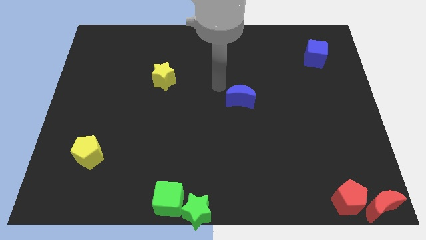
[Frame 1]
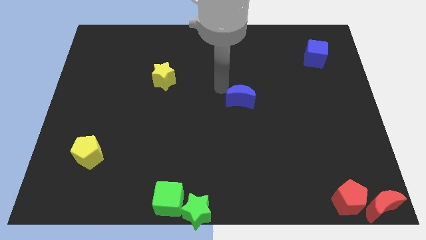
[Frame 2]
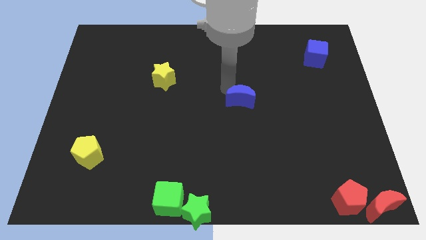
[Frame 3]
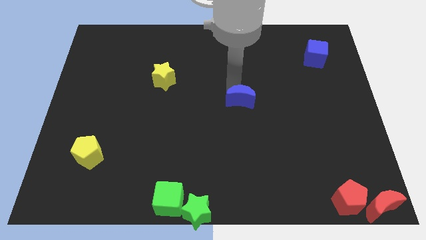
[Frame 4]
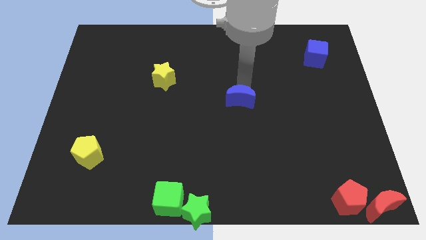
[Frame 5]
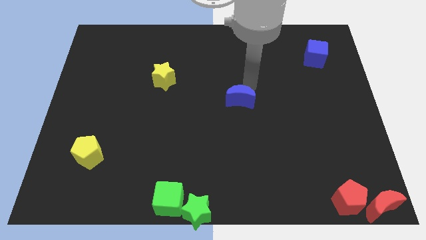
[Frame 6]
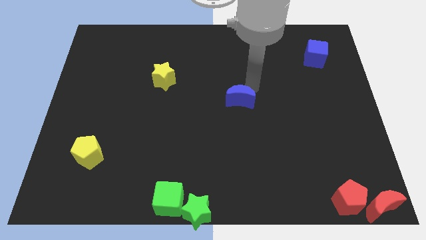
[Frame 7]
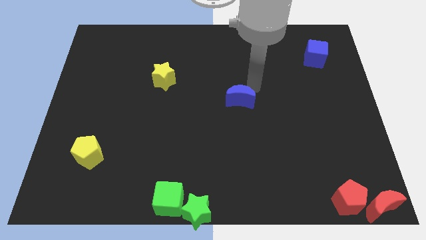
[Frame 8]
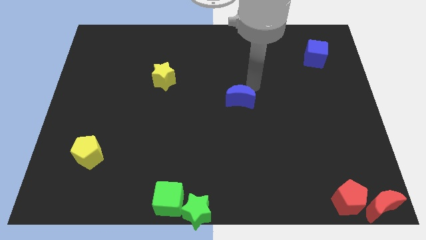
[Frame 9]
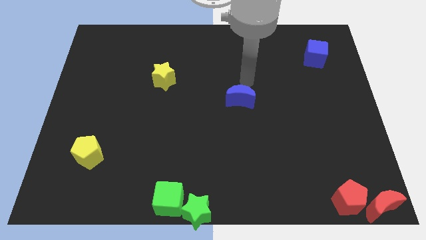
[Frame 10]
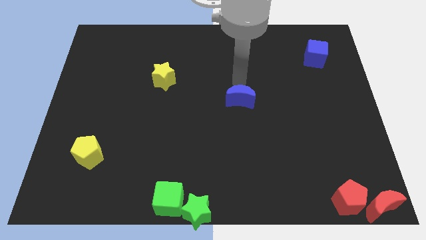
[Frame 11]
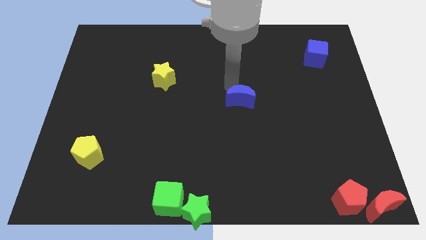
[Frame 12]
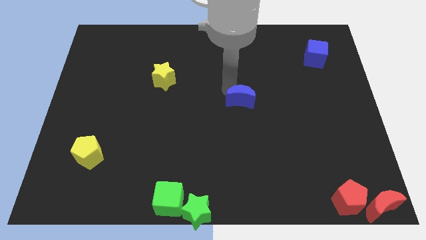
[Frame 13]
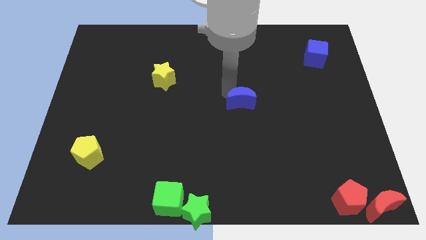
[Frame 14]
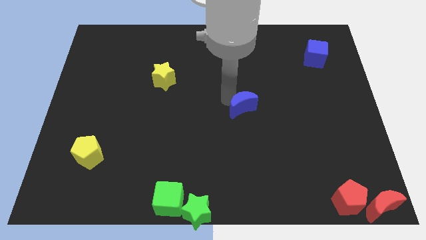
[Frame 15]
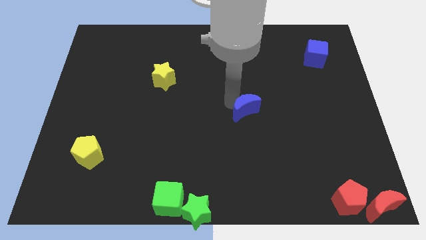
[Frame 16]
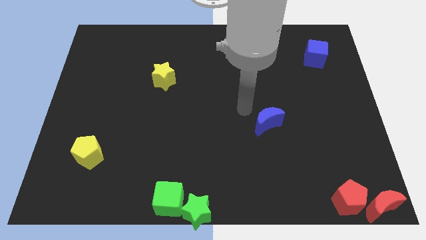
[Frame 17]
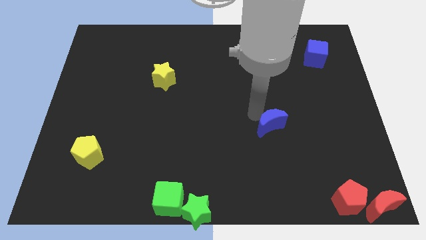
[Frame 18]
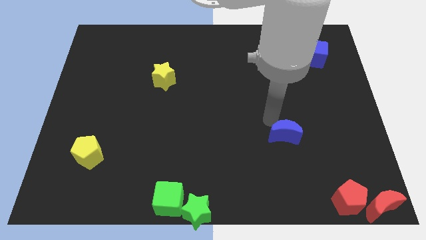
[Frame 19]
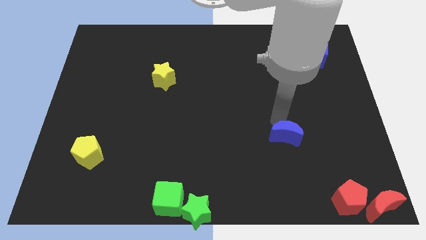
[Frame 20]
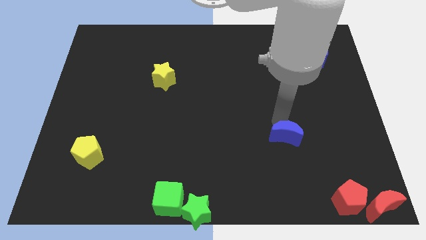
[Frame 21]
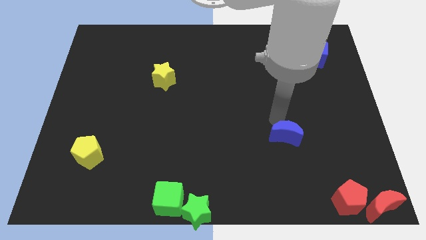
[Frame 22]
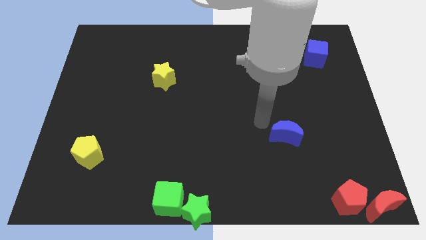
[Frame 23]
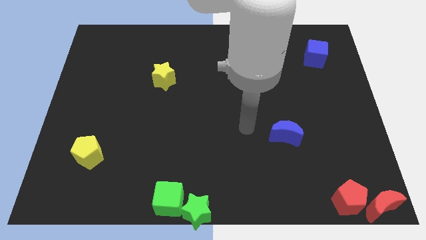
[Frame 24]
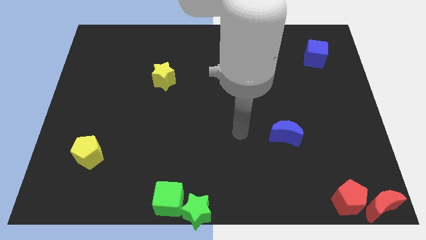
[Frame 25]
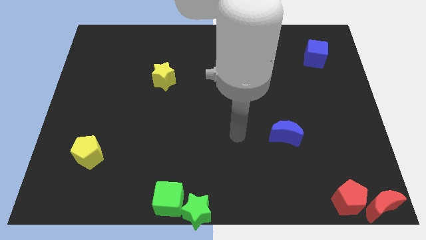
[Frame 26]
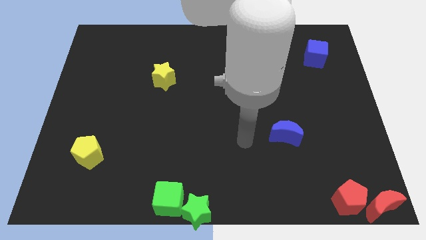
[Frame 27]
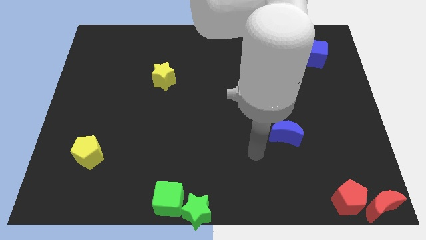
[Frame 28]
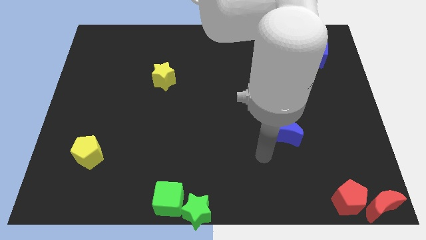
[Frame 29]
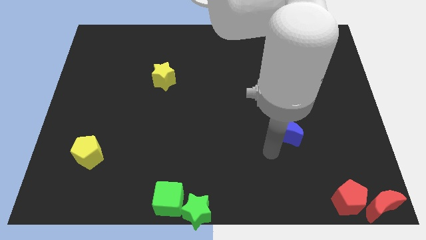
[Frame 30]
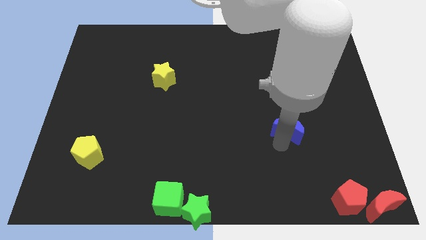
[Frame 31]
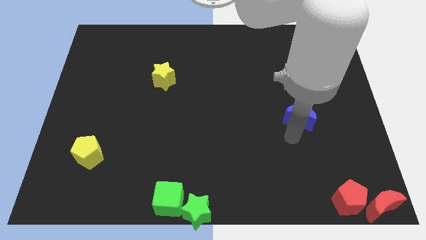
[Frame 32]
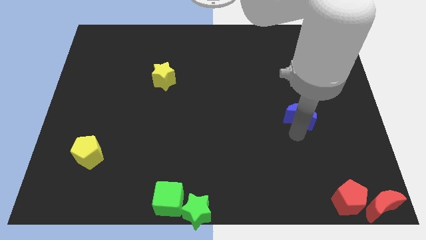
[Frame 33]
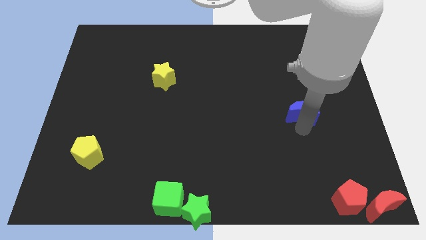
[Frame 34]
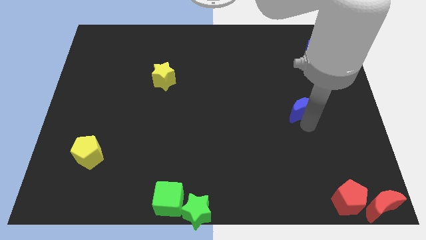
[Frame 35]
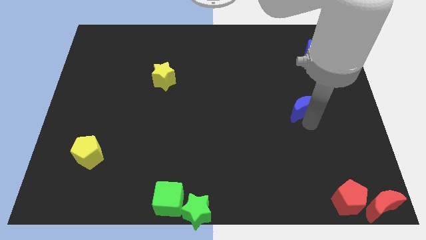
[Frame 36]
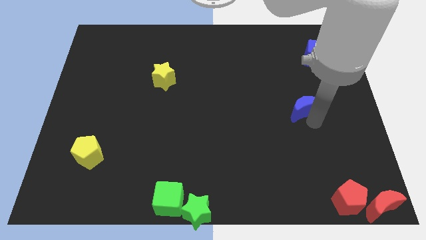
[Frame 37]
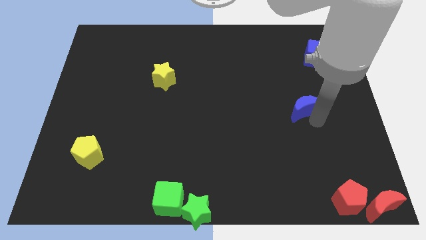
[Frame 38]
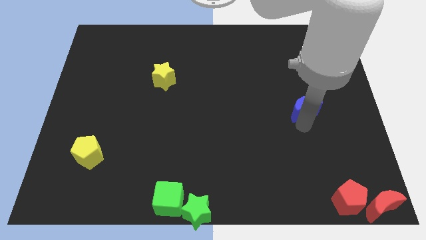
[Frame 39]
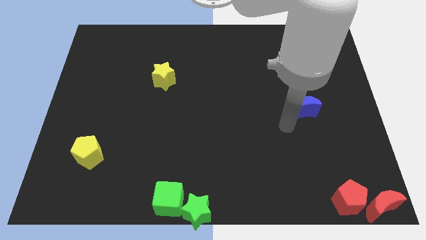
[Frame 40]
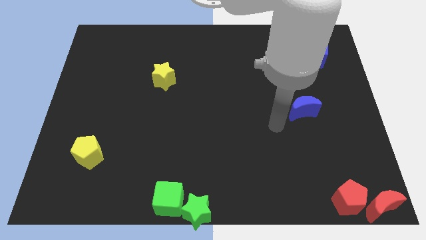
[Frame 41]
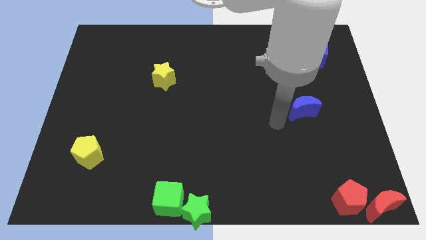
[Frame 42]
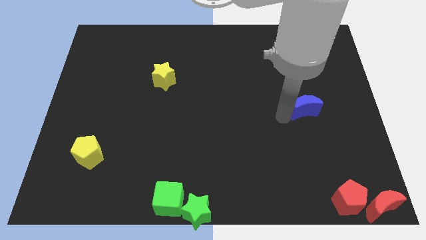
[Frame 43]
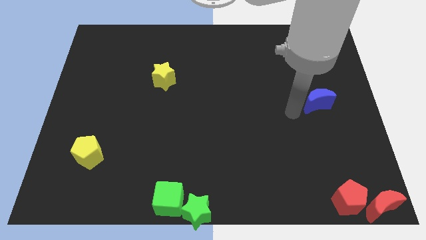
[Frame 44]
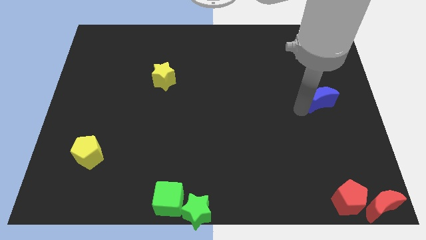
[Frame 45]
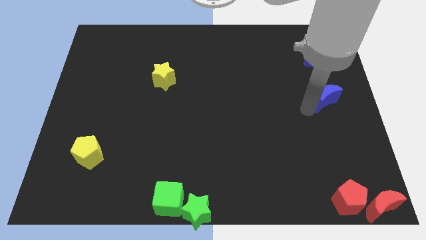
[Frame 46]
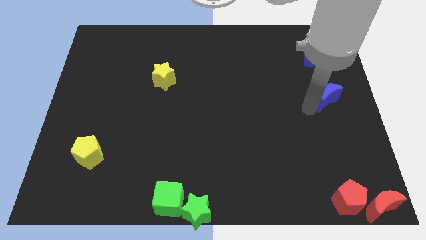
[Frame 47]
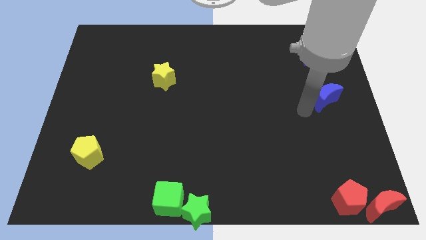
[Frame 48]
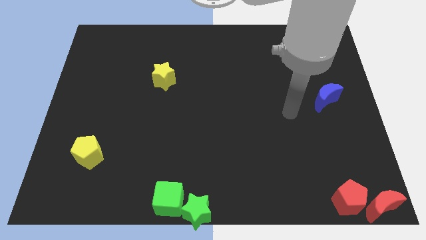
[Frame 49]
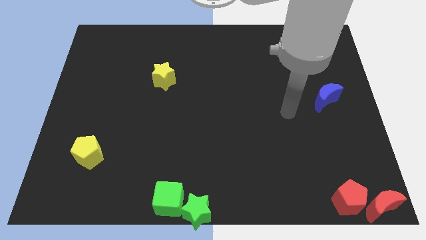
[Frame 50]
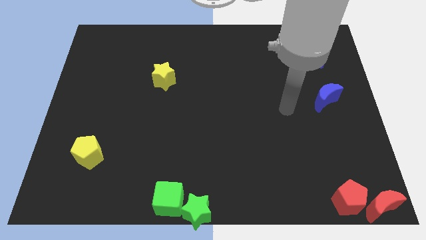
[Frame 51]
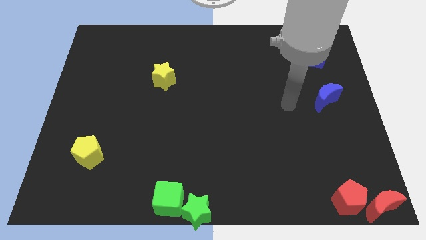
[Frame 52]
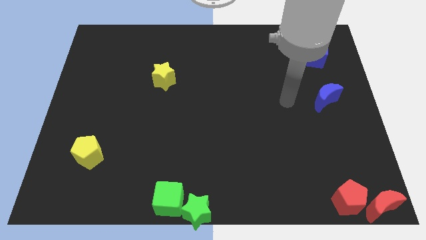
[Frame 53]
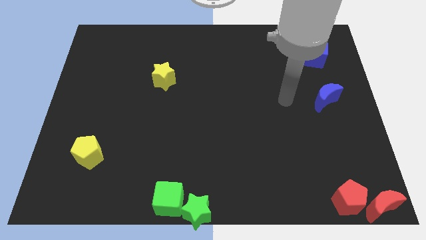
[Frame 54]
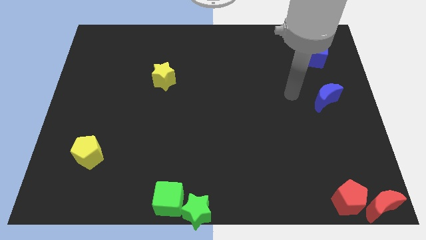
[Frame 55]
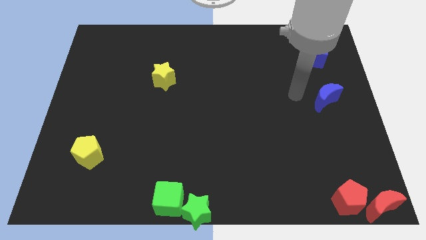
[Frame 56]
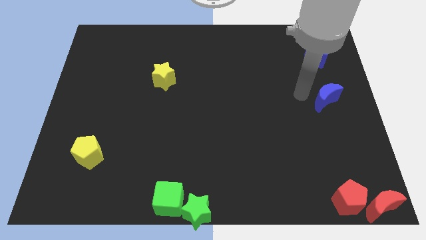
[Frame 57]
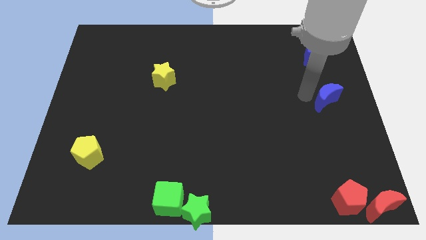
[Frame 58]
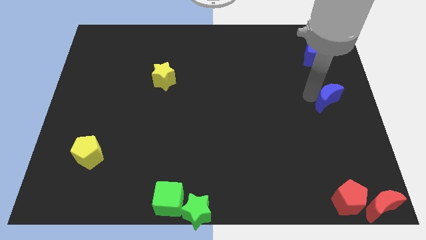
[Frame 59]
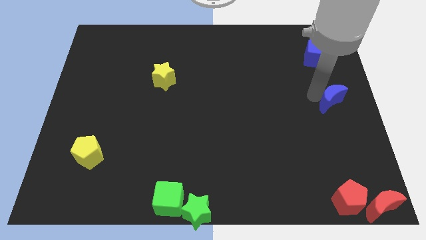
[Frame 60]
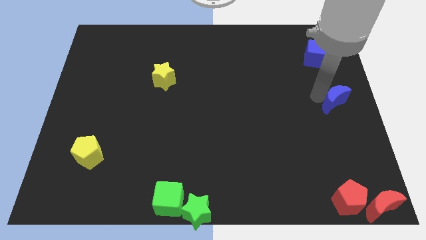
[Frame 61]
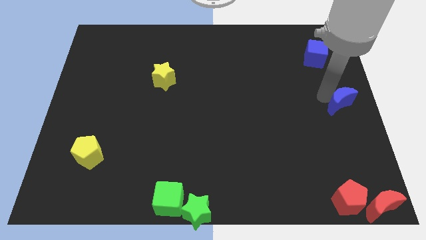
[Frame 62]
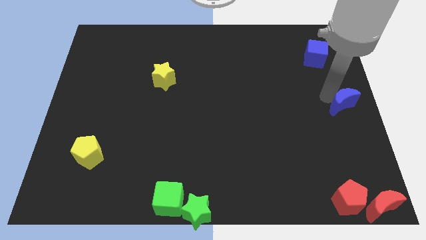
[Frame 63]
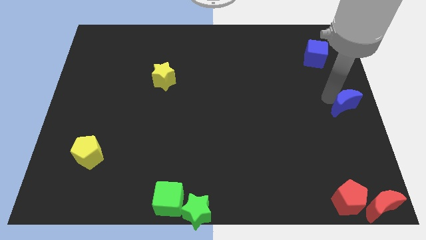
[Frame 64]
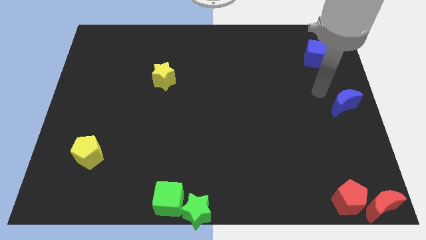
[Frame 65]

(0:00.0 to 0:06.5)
move the blue moon to the center right side of the board

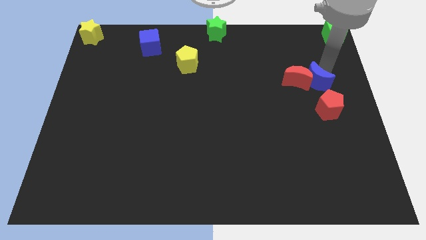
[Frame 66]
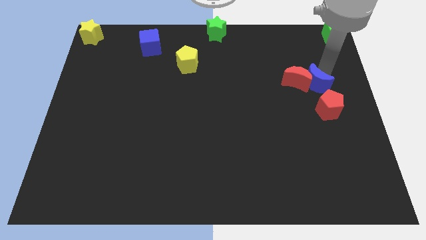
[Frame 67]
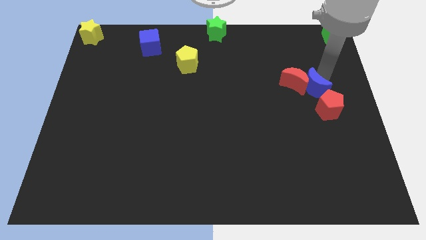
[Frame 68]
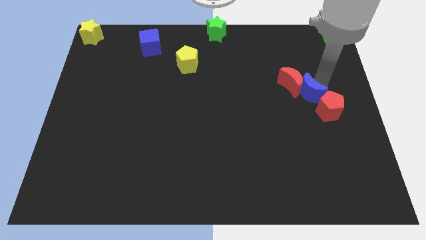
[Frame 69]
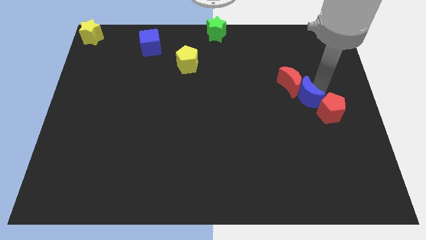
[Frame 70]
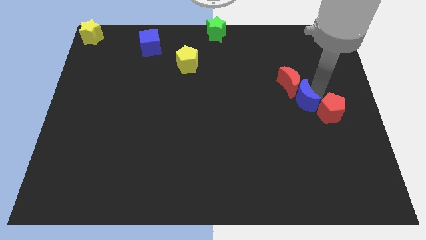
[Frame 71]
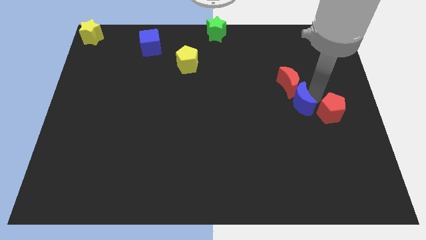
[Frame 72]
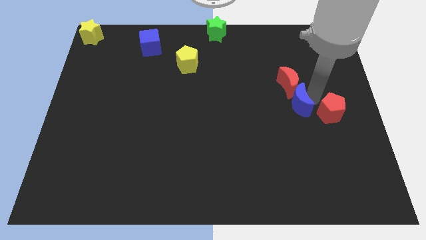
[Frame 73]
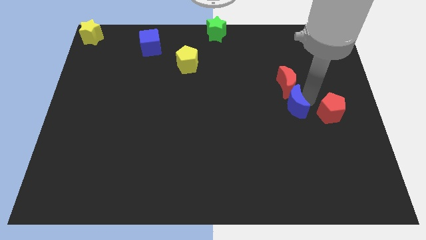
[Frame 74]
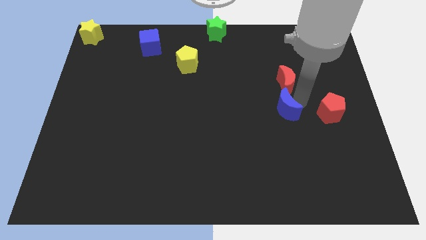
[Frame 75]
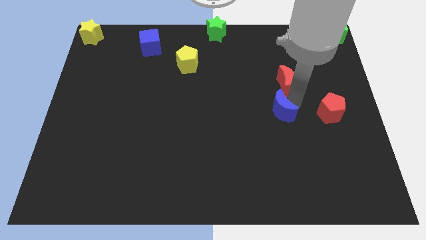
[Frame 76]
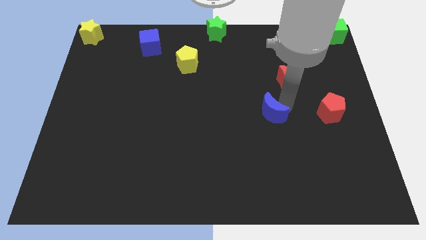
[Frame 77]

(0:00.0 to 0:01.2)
move the blue crescent to the bottom of the red crescent

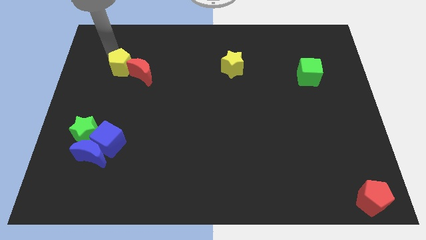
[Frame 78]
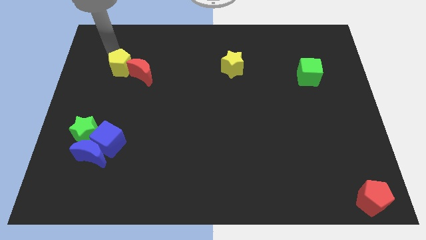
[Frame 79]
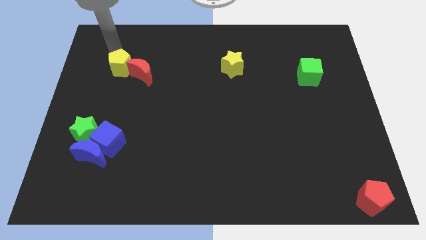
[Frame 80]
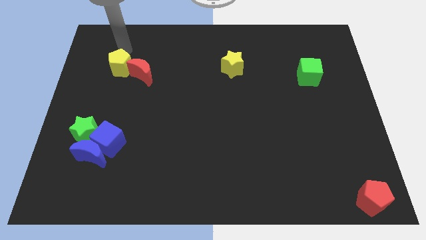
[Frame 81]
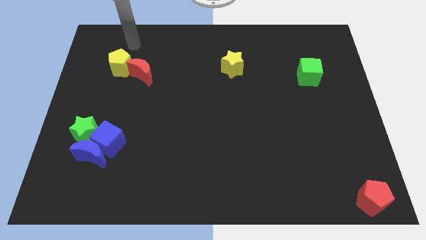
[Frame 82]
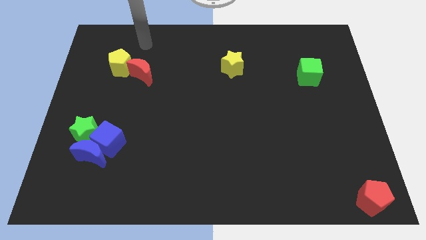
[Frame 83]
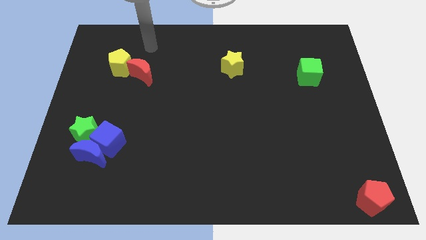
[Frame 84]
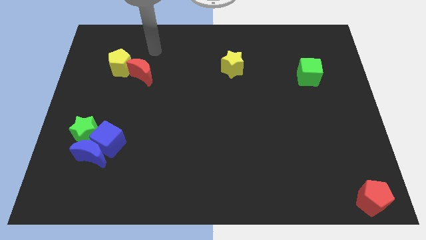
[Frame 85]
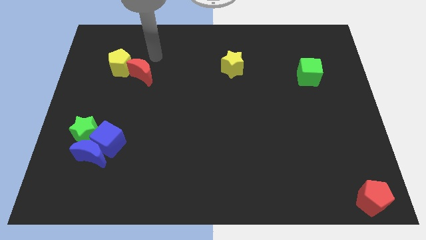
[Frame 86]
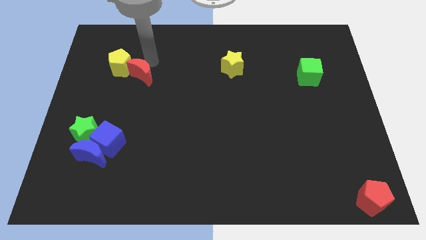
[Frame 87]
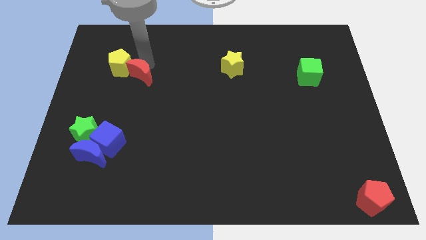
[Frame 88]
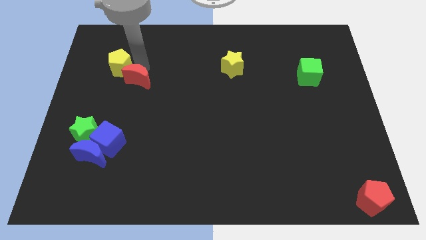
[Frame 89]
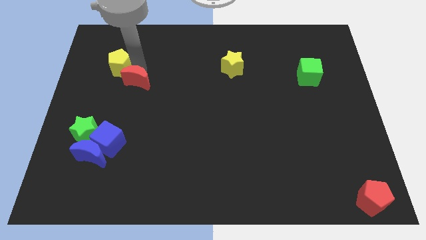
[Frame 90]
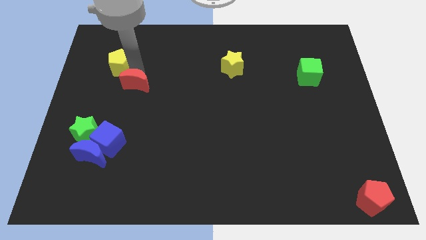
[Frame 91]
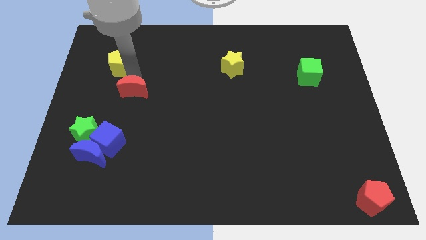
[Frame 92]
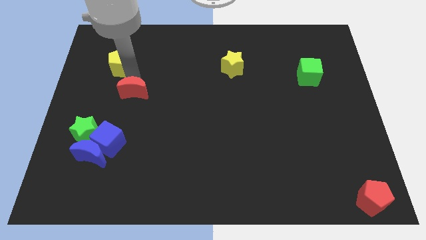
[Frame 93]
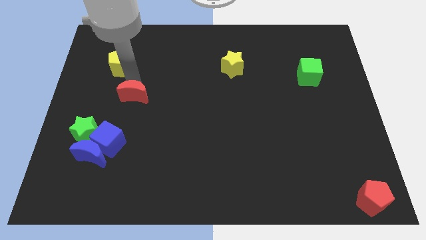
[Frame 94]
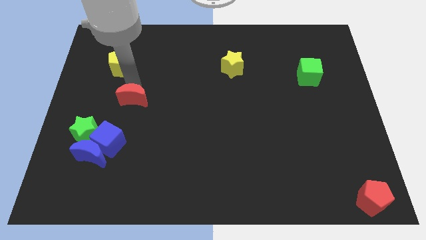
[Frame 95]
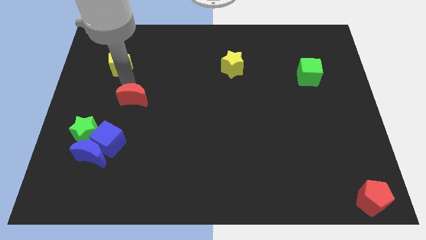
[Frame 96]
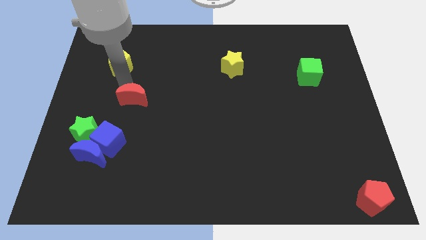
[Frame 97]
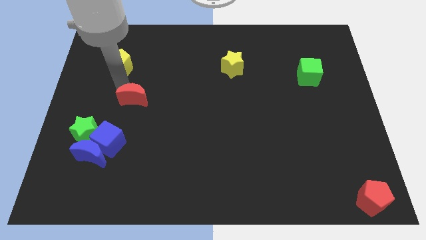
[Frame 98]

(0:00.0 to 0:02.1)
separate the red moon from the yellow pentagon
